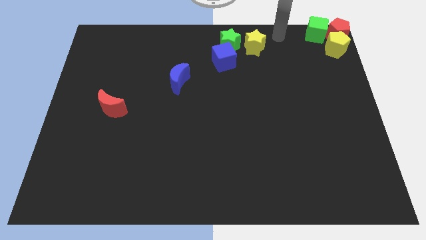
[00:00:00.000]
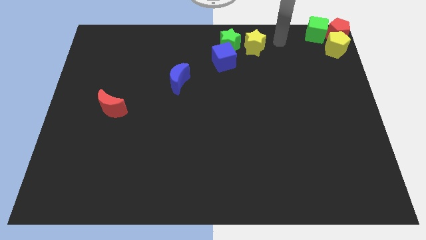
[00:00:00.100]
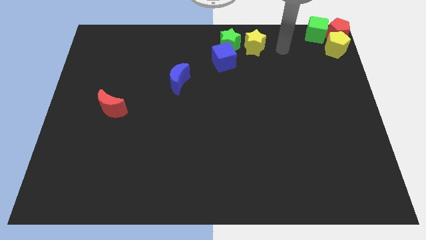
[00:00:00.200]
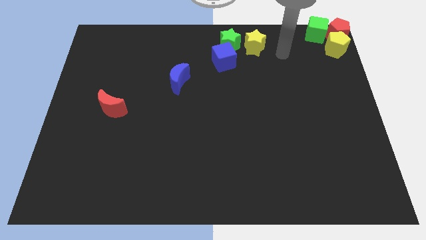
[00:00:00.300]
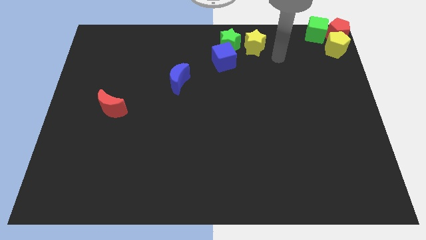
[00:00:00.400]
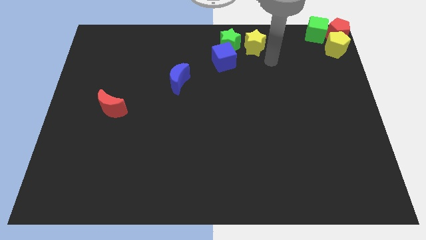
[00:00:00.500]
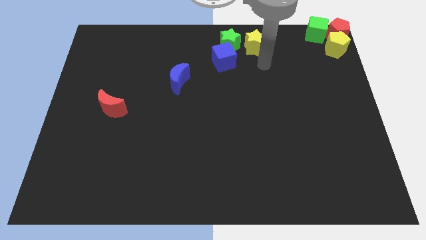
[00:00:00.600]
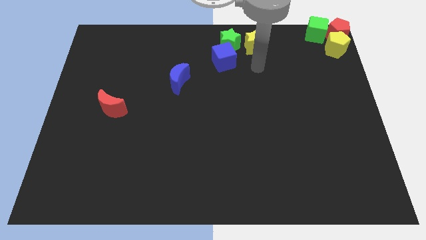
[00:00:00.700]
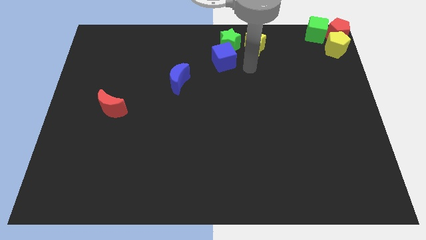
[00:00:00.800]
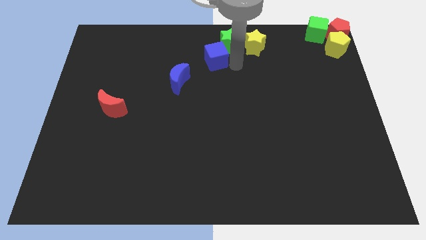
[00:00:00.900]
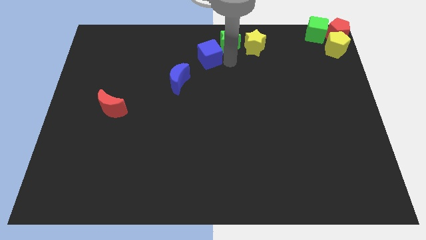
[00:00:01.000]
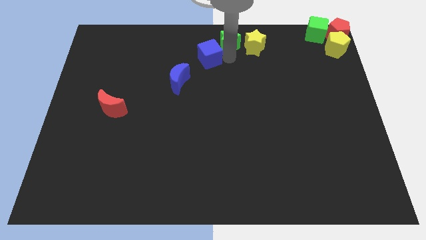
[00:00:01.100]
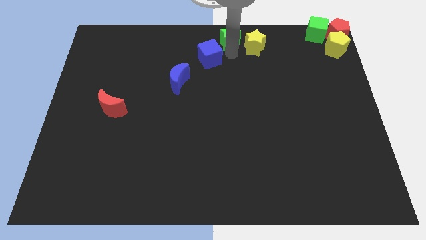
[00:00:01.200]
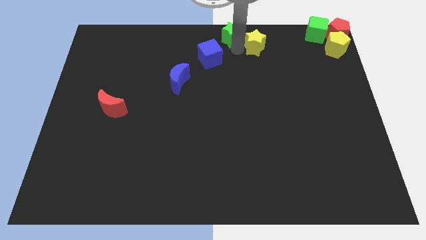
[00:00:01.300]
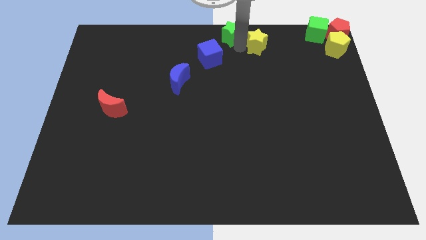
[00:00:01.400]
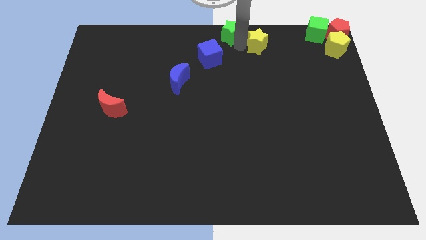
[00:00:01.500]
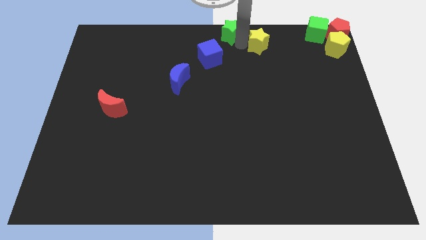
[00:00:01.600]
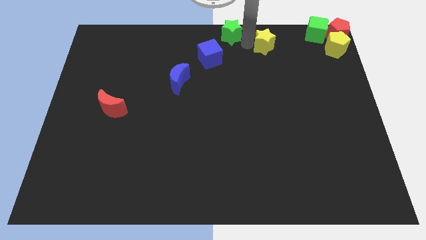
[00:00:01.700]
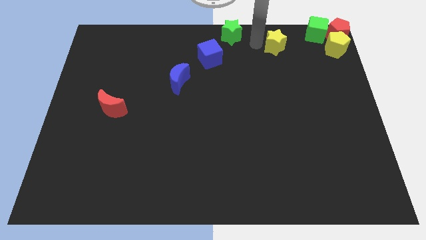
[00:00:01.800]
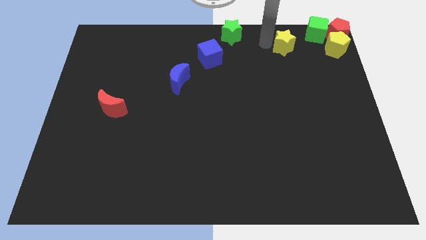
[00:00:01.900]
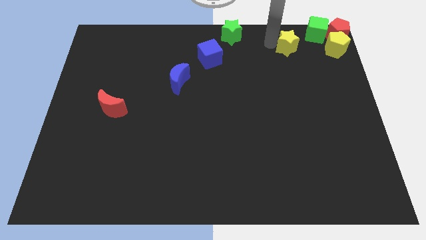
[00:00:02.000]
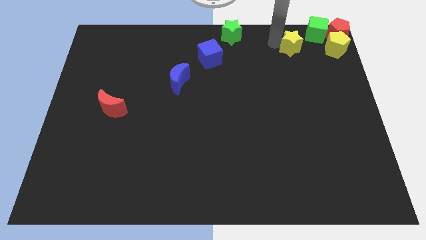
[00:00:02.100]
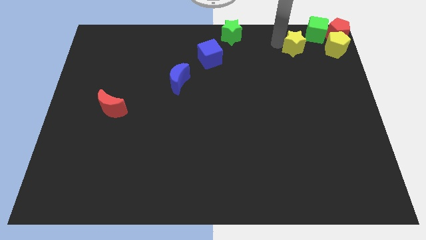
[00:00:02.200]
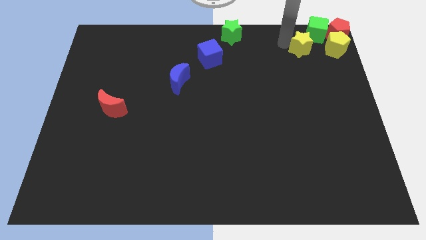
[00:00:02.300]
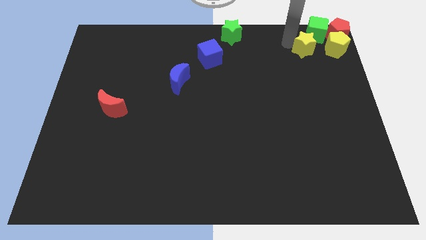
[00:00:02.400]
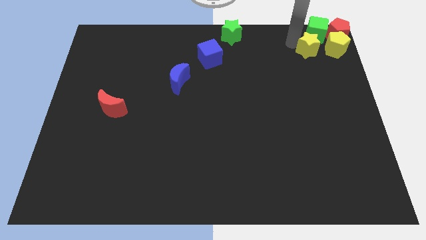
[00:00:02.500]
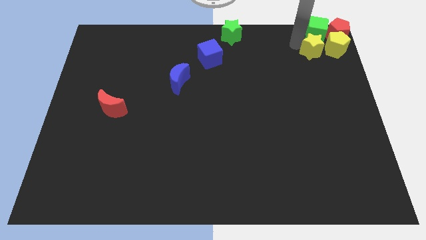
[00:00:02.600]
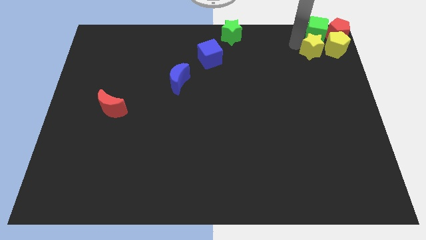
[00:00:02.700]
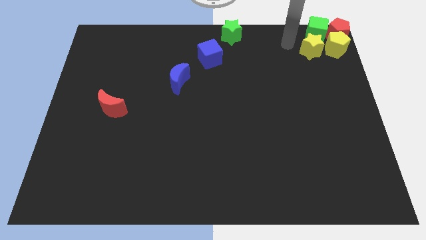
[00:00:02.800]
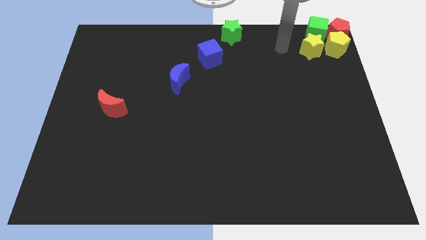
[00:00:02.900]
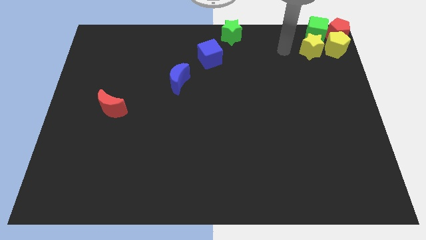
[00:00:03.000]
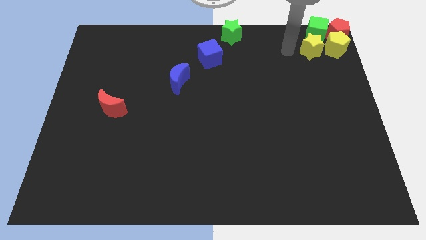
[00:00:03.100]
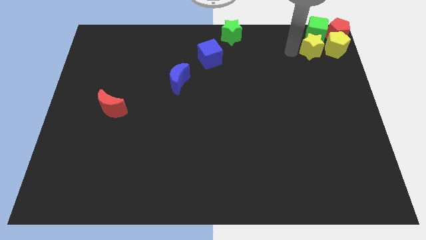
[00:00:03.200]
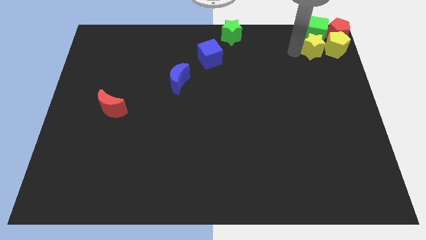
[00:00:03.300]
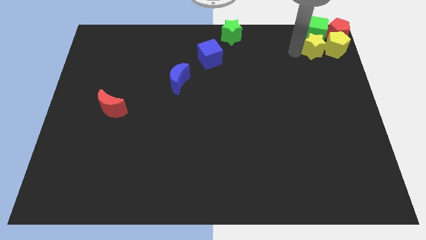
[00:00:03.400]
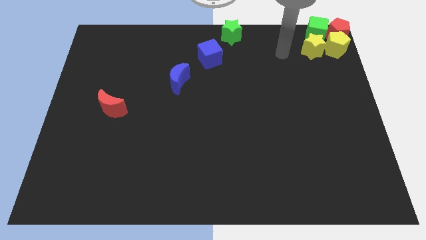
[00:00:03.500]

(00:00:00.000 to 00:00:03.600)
move the yellow star left beside the yellow pentagon

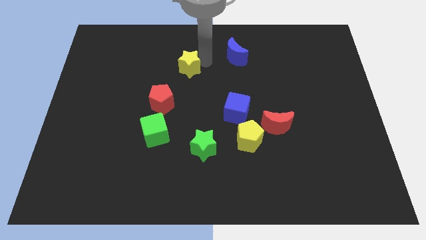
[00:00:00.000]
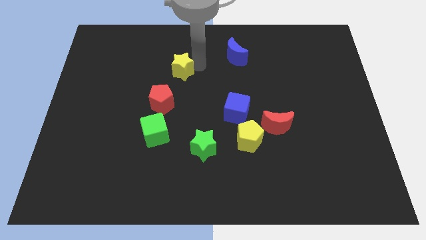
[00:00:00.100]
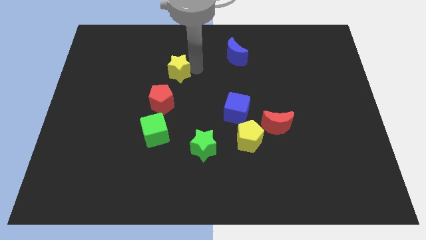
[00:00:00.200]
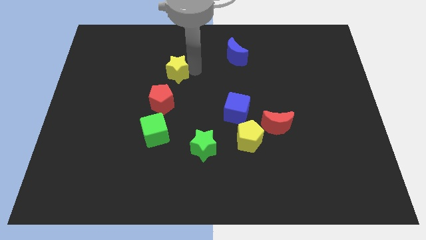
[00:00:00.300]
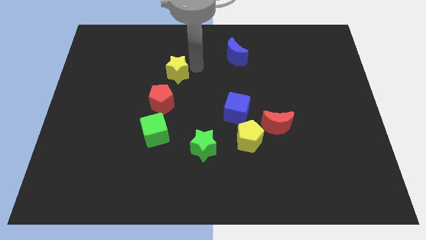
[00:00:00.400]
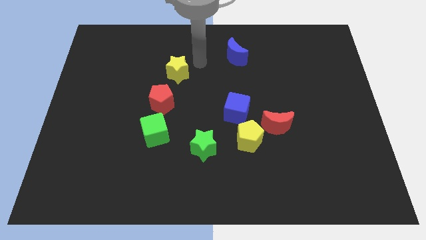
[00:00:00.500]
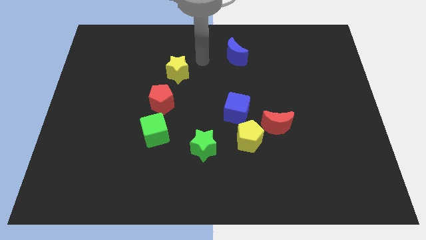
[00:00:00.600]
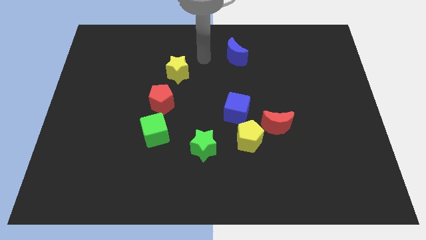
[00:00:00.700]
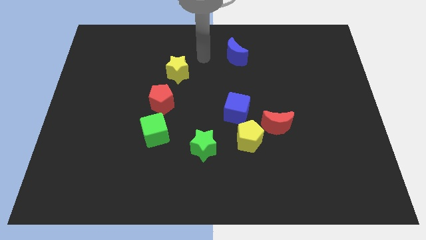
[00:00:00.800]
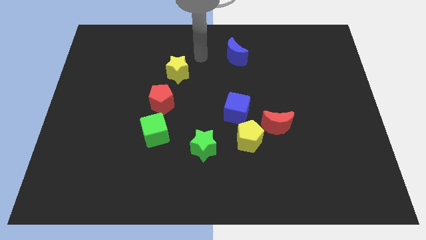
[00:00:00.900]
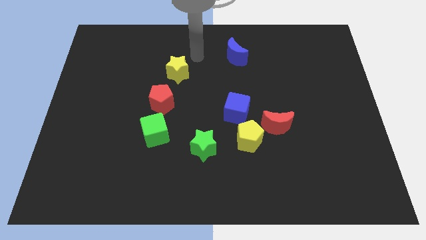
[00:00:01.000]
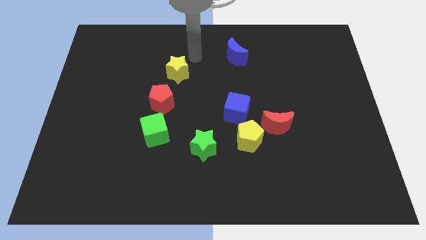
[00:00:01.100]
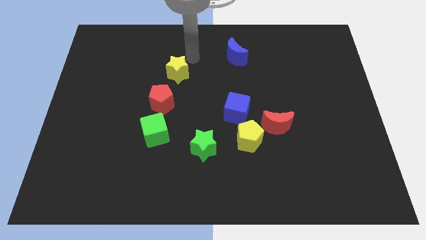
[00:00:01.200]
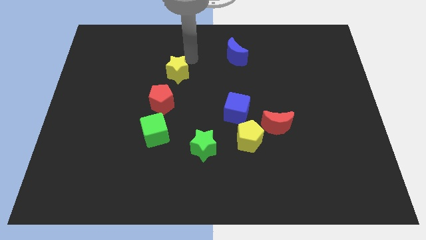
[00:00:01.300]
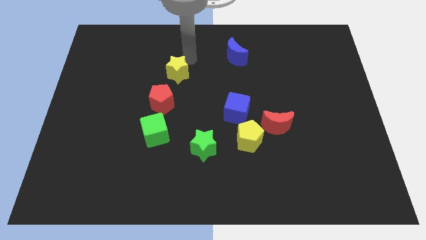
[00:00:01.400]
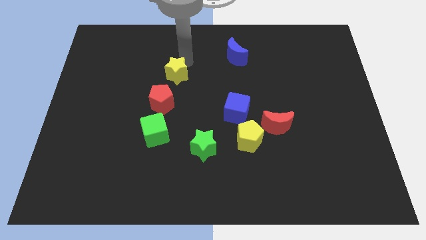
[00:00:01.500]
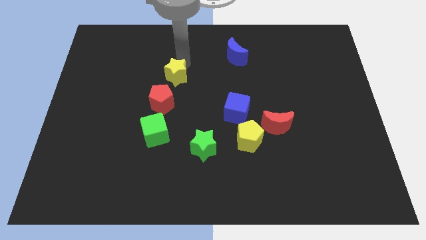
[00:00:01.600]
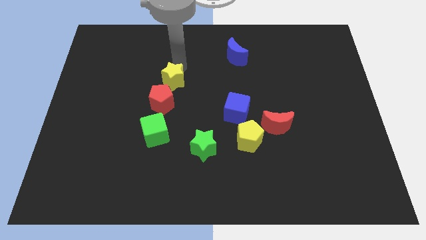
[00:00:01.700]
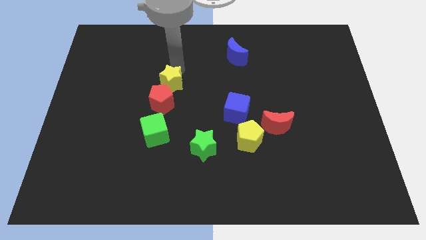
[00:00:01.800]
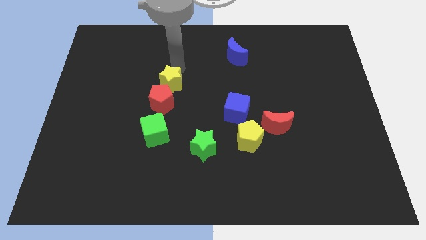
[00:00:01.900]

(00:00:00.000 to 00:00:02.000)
push the yellow star to the top of the red pentagon

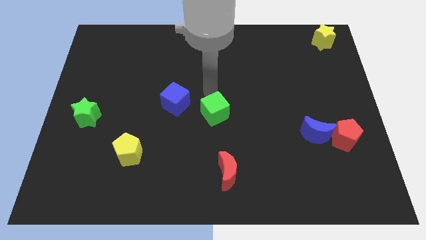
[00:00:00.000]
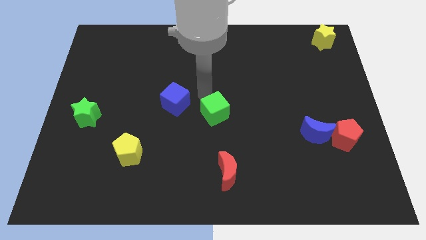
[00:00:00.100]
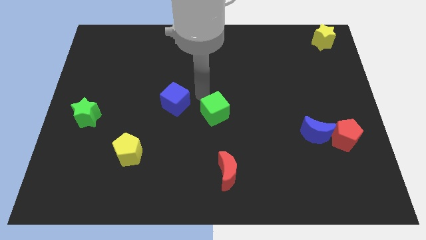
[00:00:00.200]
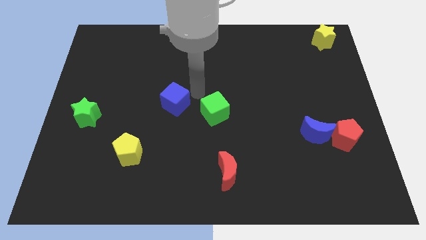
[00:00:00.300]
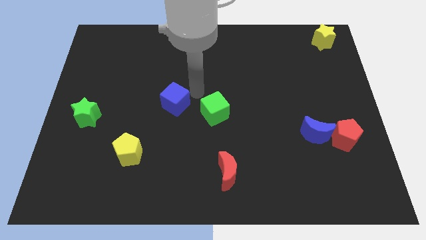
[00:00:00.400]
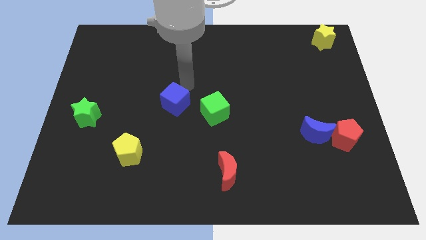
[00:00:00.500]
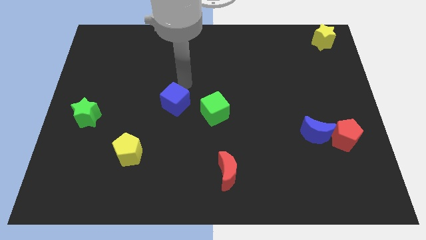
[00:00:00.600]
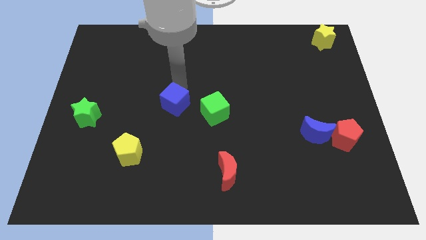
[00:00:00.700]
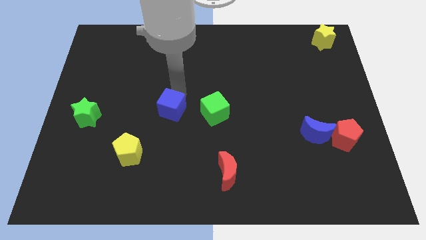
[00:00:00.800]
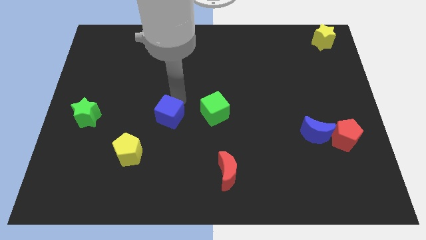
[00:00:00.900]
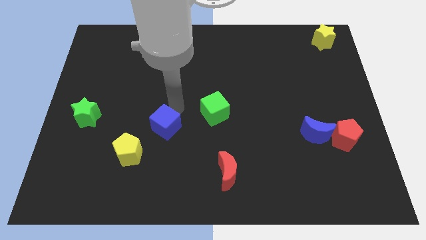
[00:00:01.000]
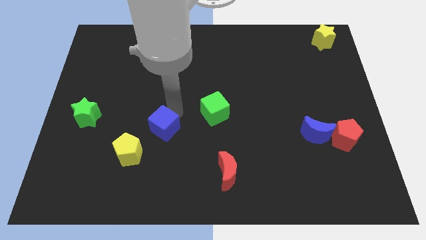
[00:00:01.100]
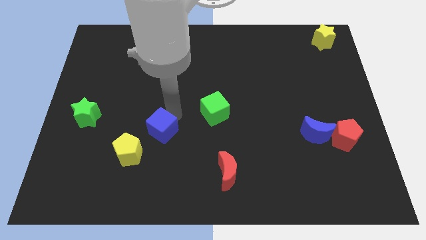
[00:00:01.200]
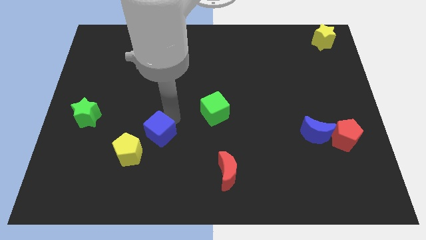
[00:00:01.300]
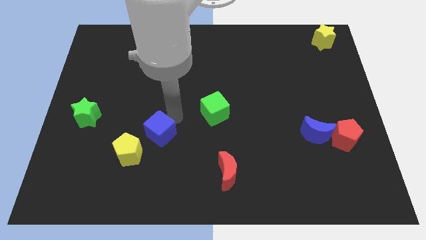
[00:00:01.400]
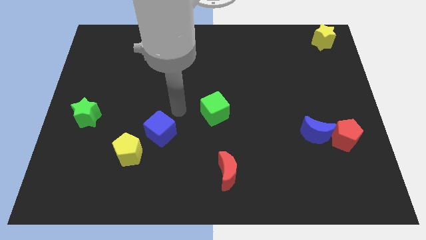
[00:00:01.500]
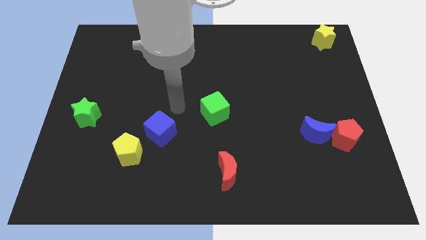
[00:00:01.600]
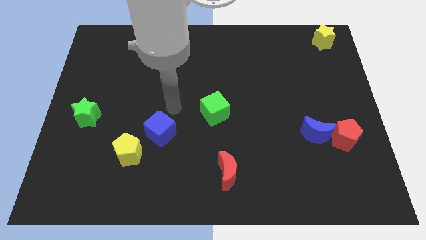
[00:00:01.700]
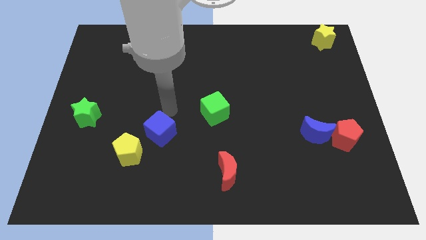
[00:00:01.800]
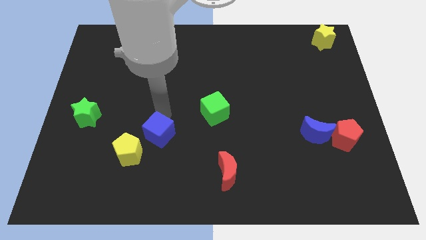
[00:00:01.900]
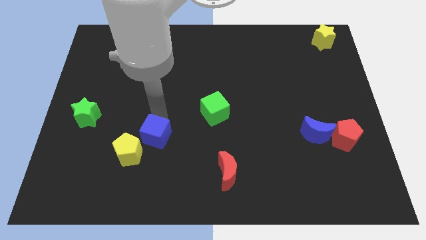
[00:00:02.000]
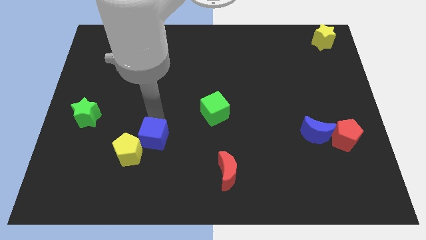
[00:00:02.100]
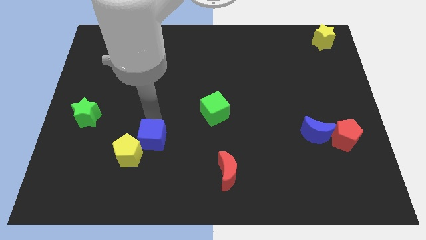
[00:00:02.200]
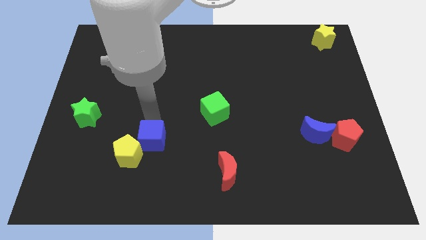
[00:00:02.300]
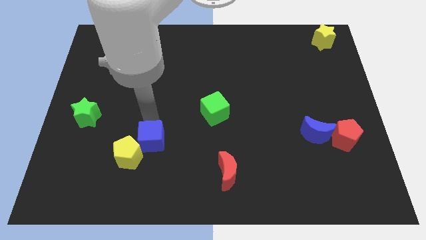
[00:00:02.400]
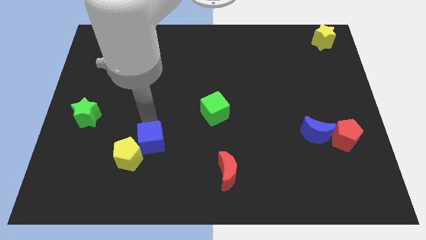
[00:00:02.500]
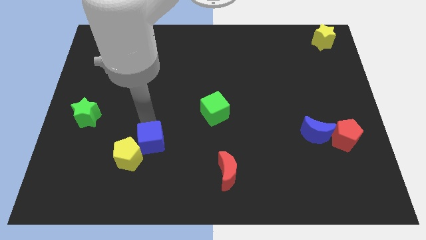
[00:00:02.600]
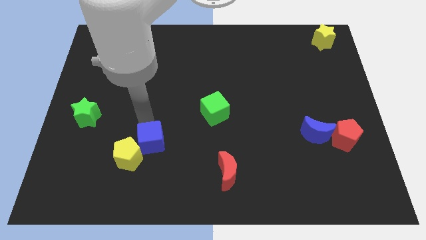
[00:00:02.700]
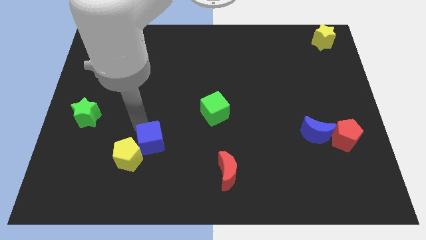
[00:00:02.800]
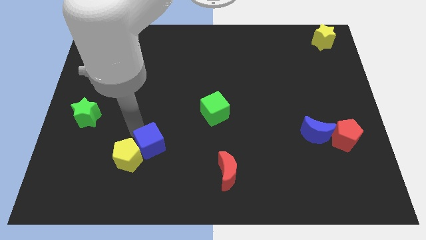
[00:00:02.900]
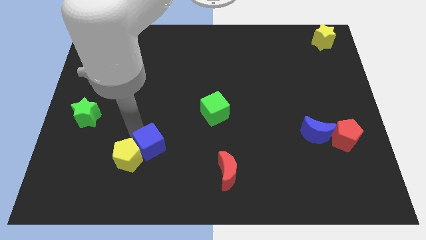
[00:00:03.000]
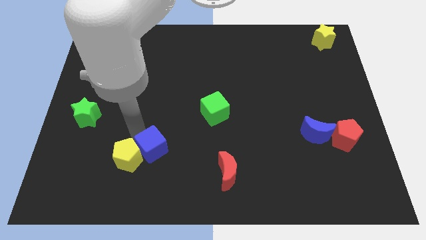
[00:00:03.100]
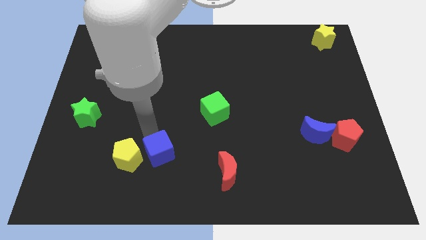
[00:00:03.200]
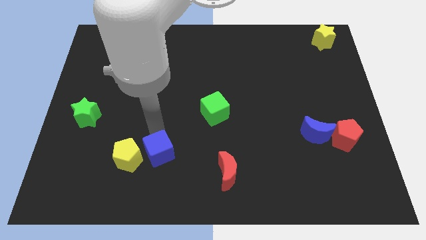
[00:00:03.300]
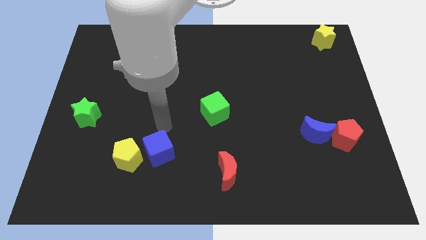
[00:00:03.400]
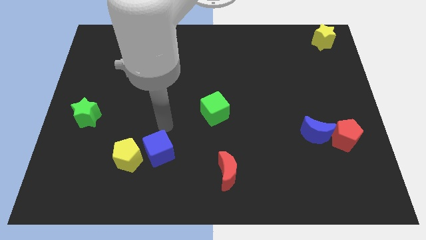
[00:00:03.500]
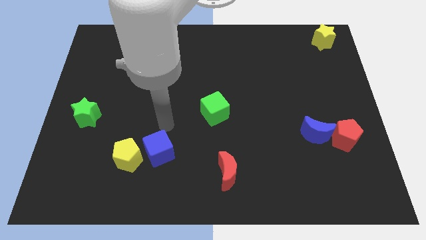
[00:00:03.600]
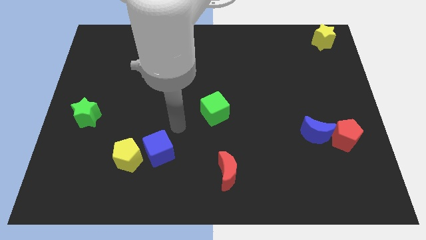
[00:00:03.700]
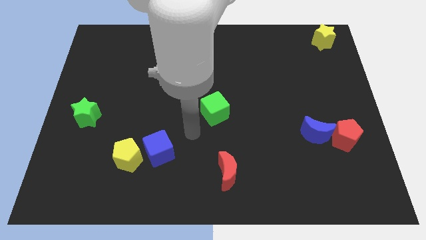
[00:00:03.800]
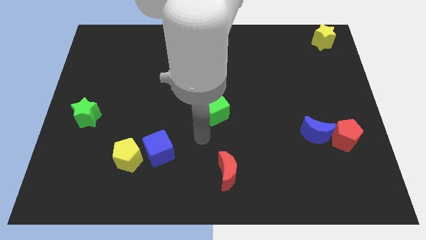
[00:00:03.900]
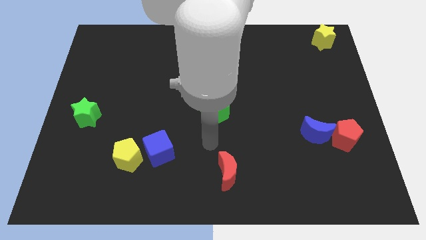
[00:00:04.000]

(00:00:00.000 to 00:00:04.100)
place blue cube to the right of yellow pentagon
